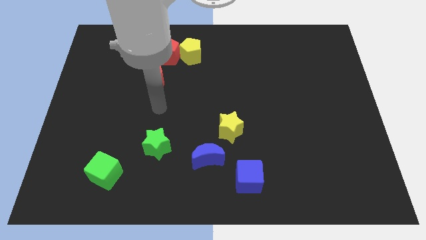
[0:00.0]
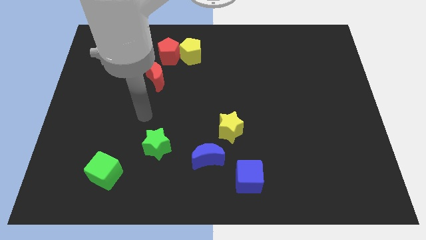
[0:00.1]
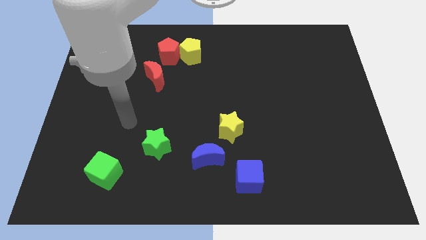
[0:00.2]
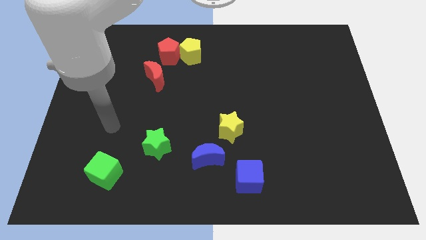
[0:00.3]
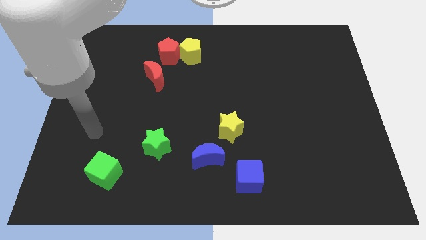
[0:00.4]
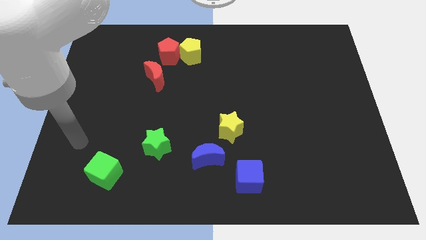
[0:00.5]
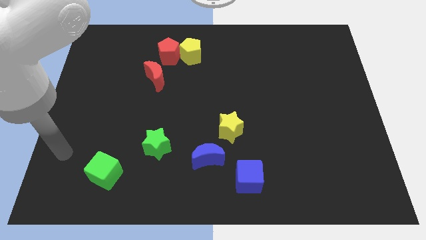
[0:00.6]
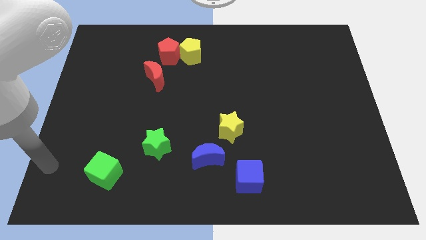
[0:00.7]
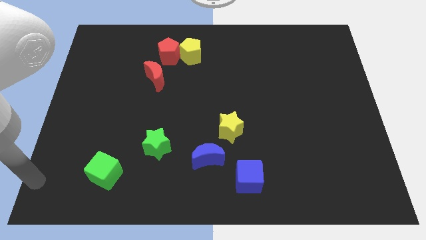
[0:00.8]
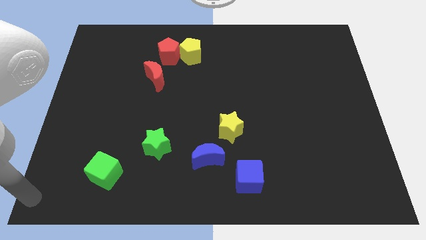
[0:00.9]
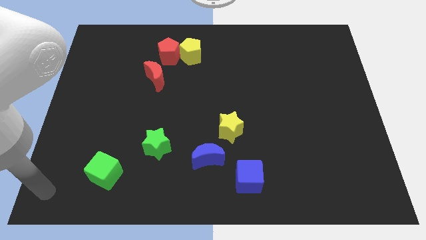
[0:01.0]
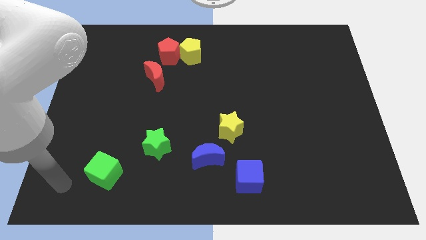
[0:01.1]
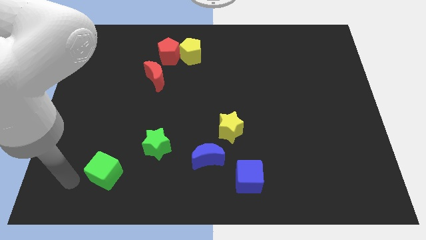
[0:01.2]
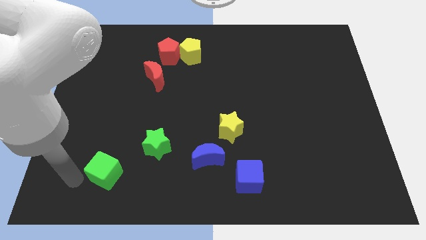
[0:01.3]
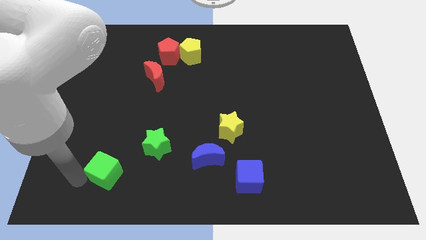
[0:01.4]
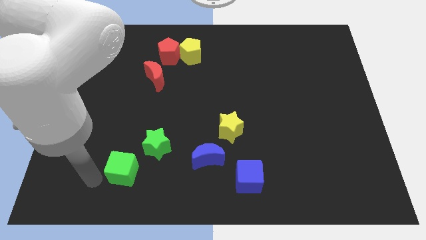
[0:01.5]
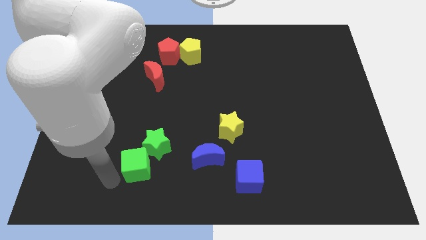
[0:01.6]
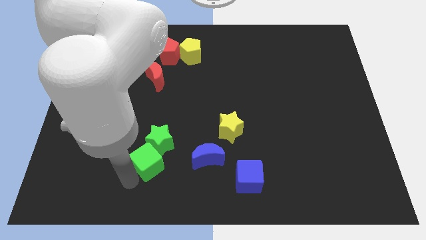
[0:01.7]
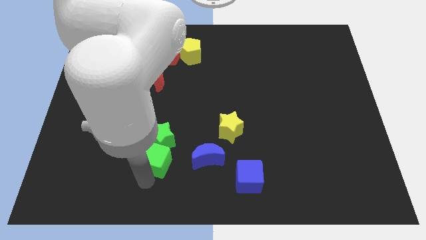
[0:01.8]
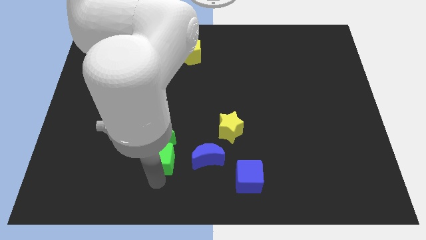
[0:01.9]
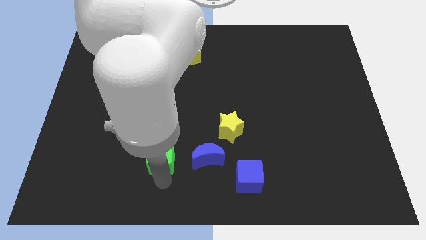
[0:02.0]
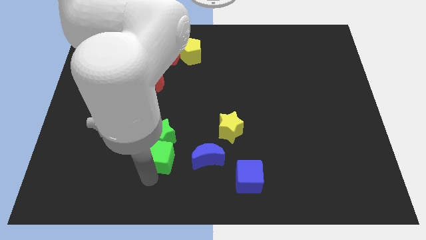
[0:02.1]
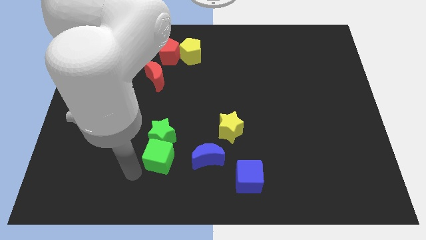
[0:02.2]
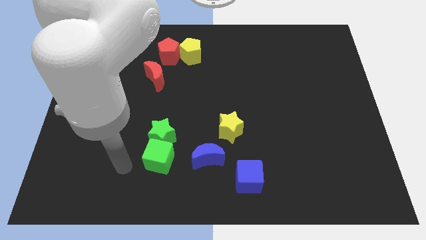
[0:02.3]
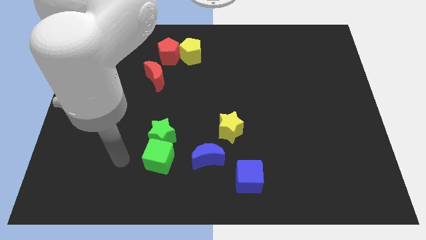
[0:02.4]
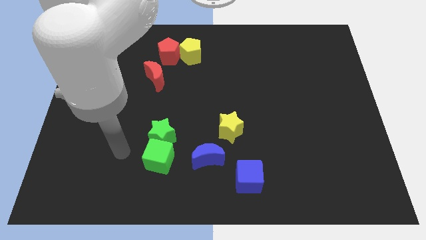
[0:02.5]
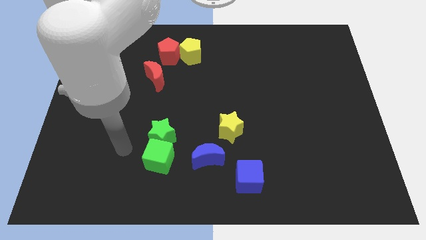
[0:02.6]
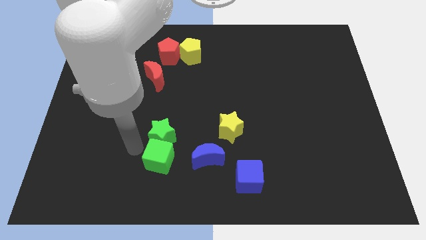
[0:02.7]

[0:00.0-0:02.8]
place the green cube at the bottom of the green star

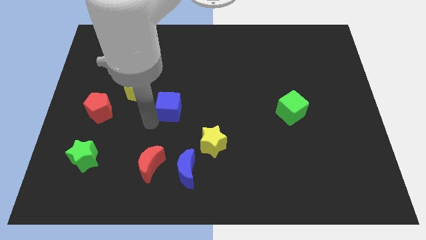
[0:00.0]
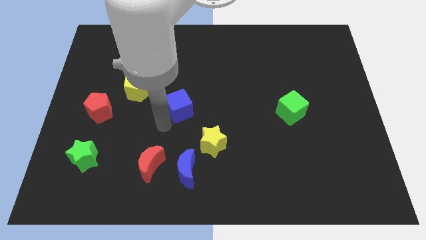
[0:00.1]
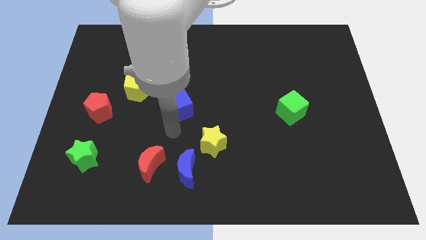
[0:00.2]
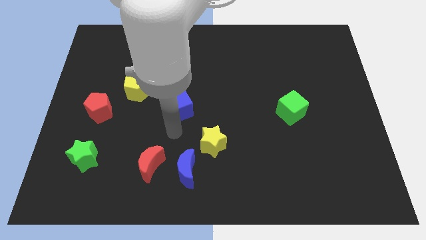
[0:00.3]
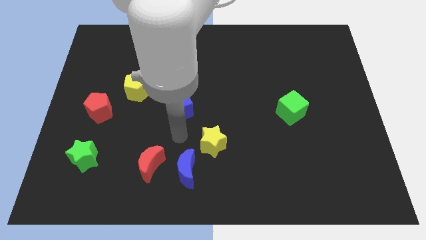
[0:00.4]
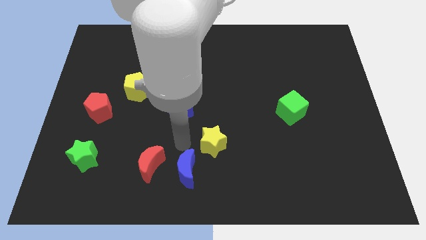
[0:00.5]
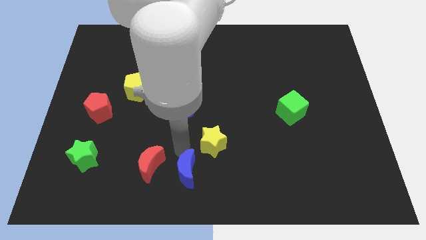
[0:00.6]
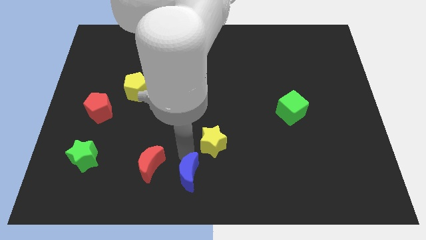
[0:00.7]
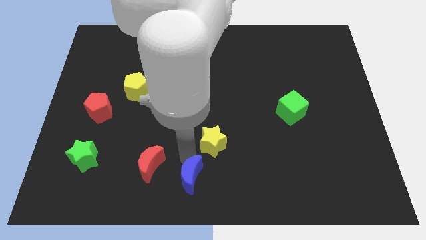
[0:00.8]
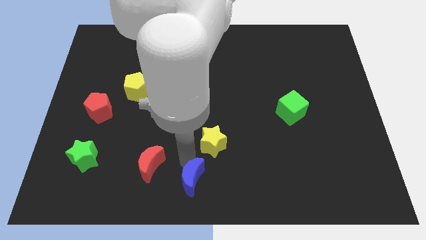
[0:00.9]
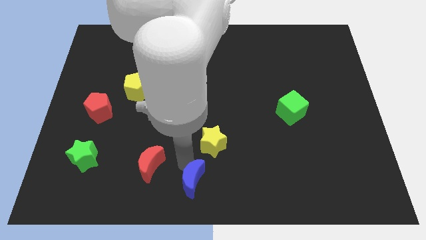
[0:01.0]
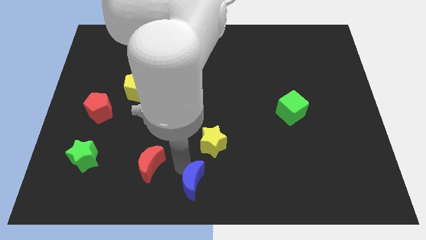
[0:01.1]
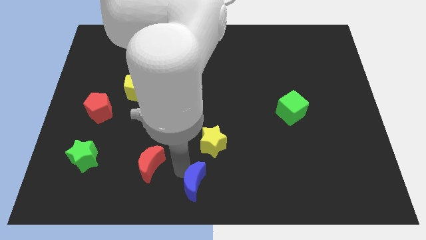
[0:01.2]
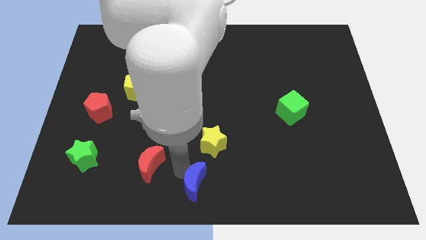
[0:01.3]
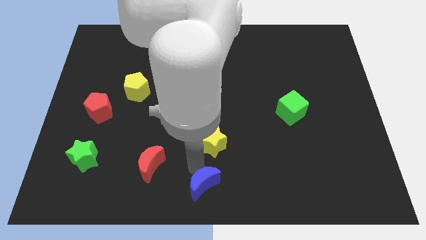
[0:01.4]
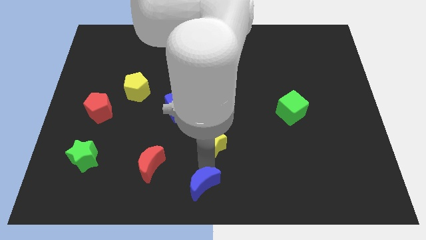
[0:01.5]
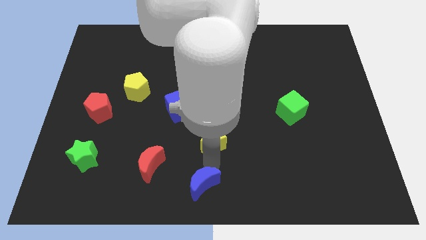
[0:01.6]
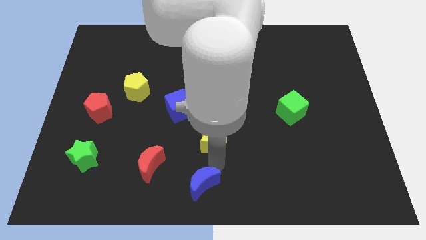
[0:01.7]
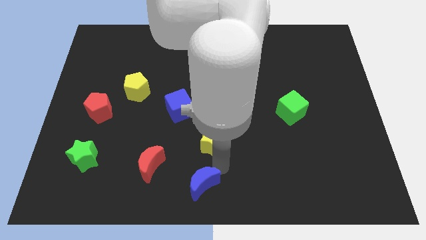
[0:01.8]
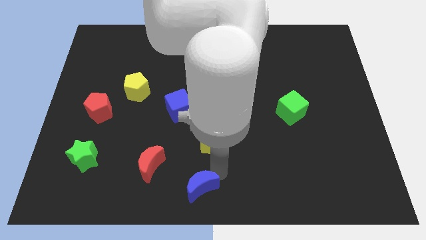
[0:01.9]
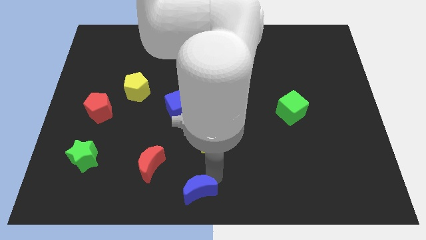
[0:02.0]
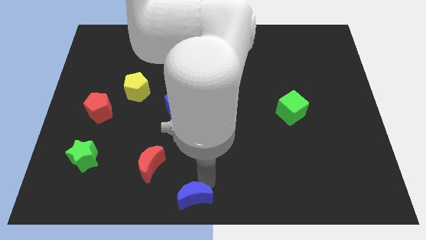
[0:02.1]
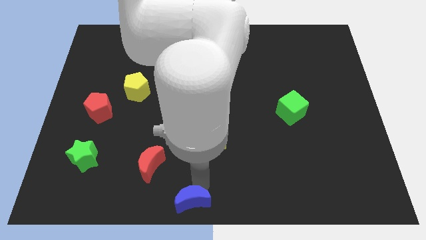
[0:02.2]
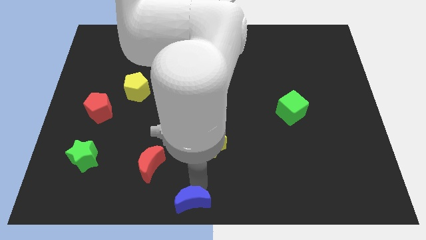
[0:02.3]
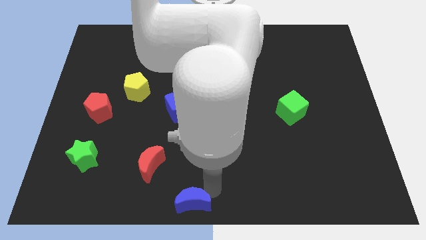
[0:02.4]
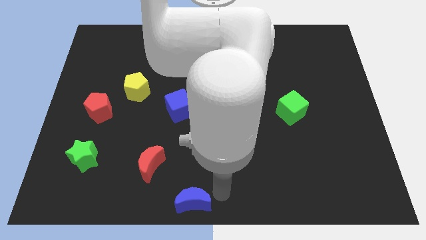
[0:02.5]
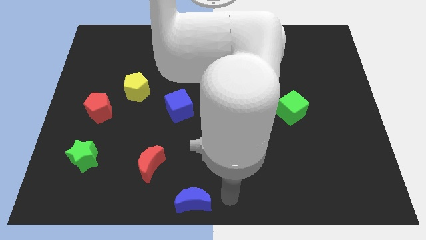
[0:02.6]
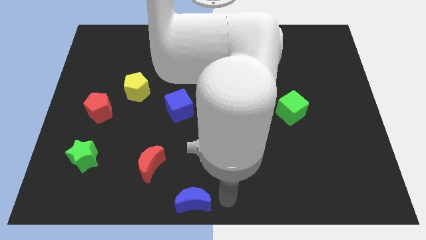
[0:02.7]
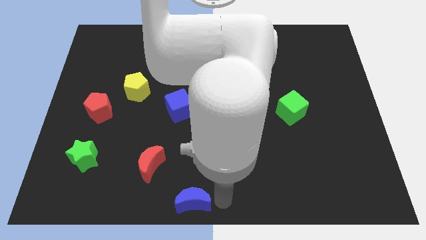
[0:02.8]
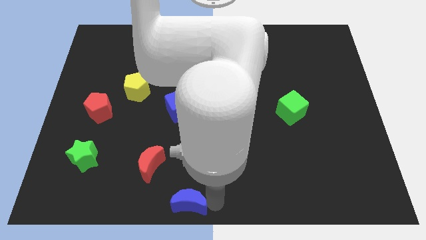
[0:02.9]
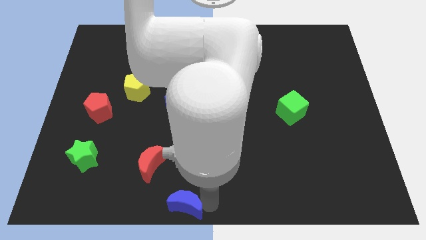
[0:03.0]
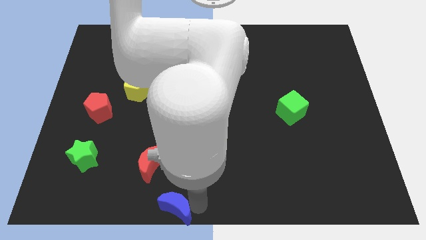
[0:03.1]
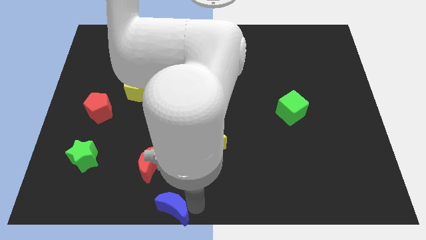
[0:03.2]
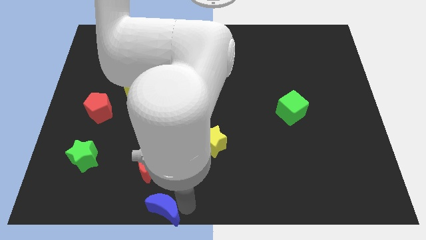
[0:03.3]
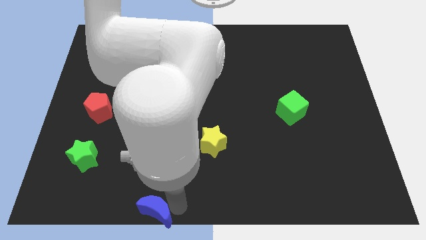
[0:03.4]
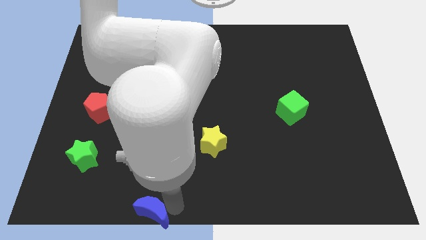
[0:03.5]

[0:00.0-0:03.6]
push the blue crescent below the red moon

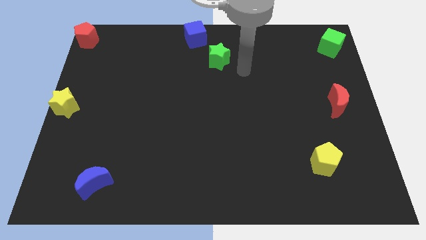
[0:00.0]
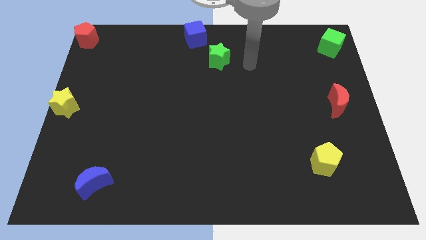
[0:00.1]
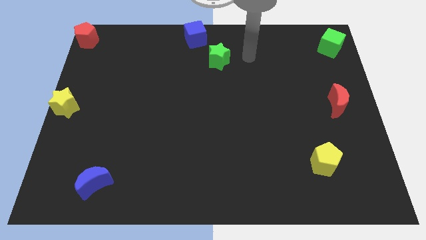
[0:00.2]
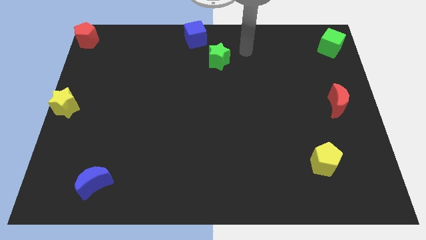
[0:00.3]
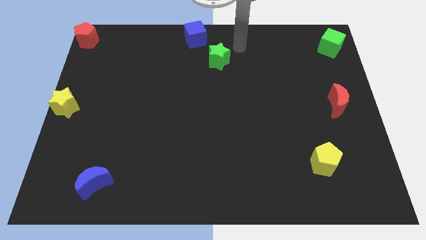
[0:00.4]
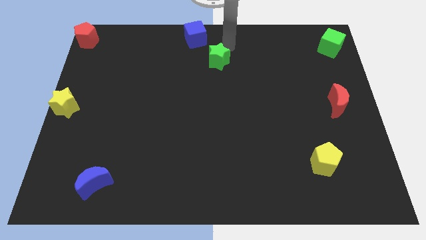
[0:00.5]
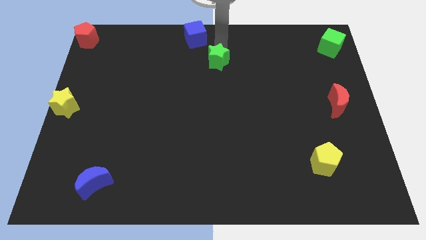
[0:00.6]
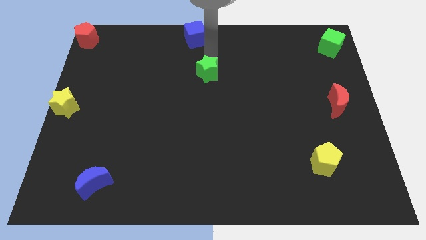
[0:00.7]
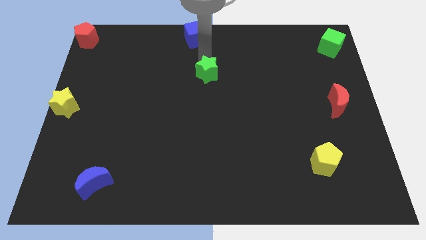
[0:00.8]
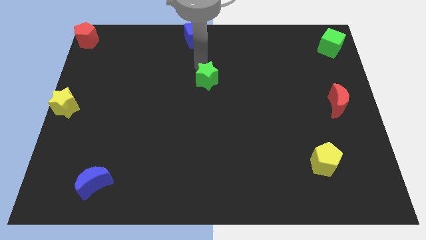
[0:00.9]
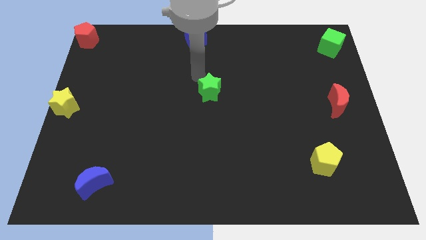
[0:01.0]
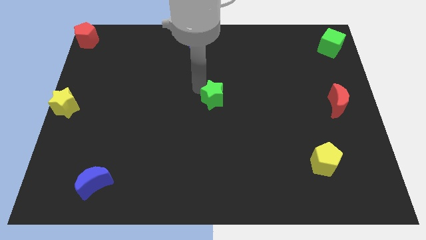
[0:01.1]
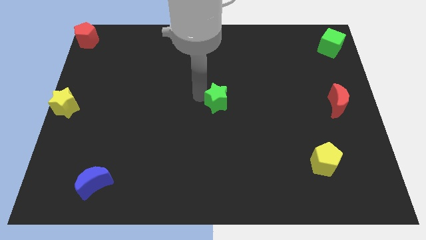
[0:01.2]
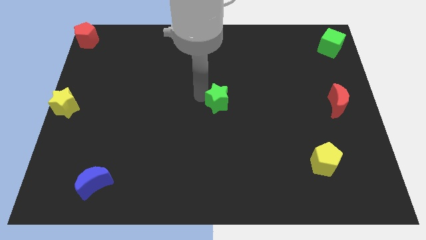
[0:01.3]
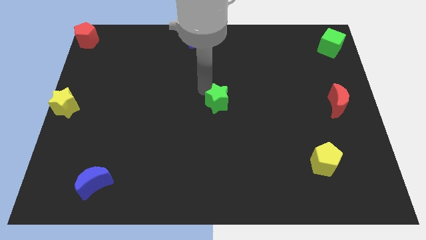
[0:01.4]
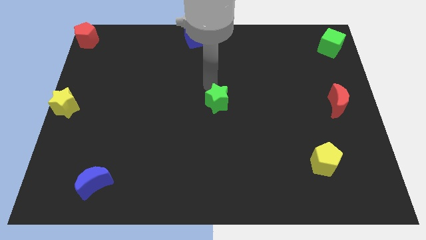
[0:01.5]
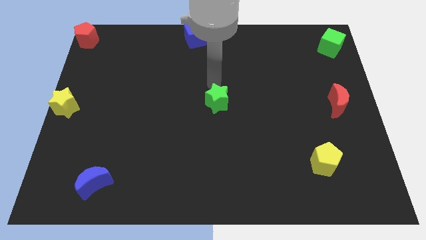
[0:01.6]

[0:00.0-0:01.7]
push the green star towards the center of the board

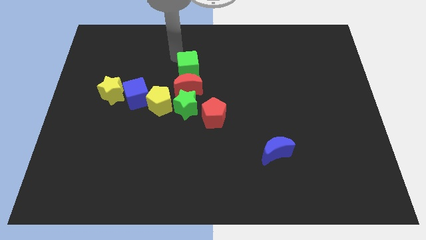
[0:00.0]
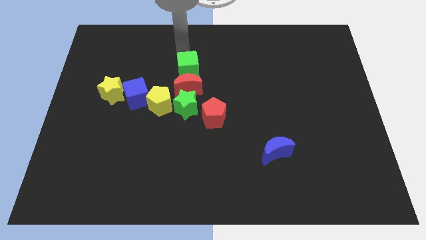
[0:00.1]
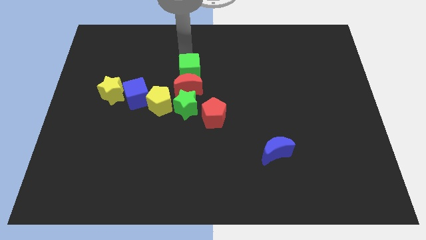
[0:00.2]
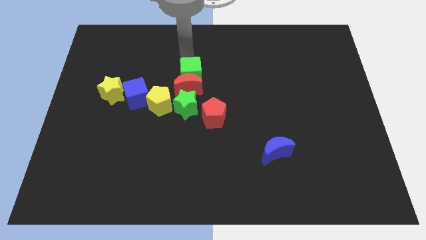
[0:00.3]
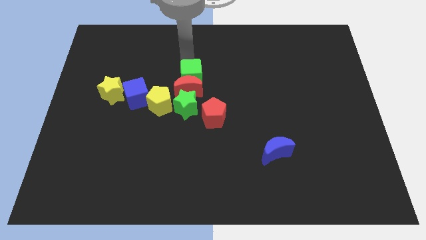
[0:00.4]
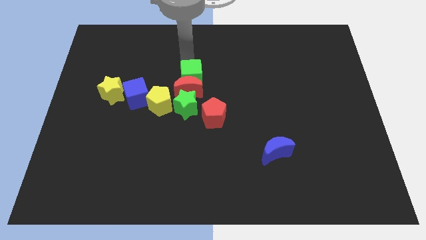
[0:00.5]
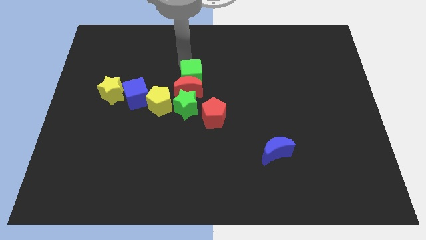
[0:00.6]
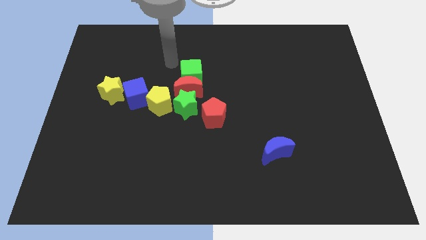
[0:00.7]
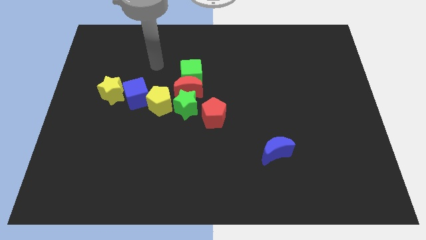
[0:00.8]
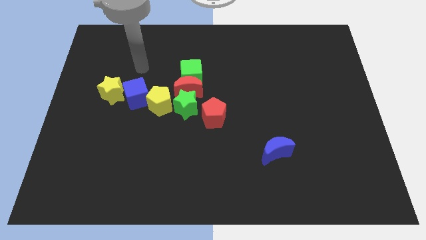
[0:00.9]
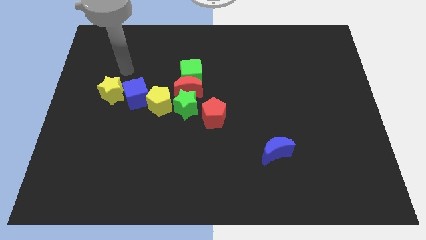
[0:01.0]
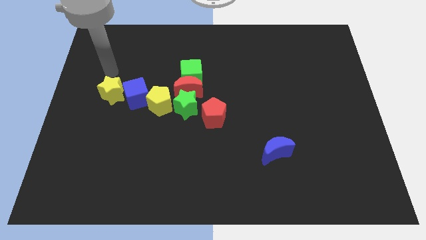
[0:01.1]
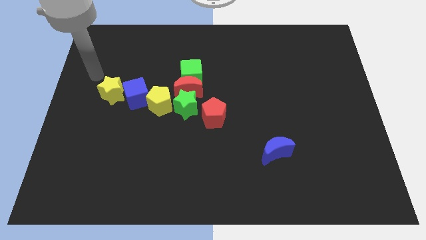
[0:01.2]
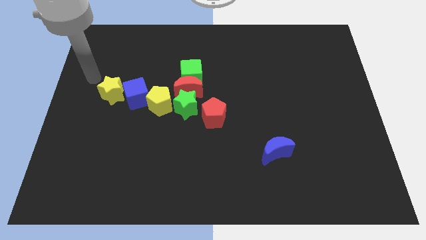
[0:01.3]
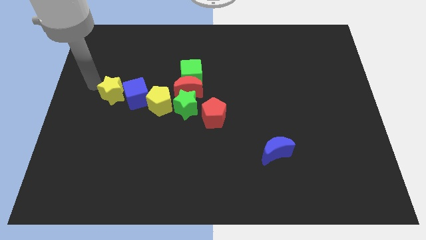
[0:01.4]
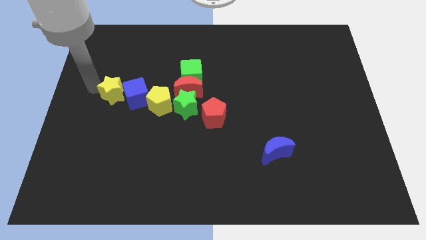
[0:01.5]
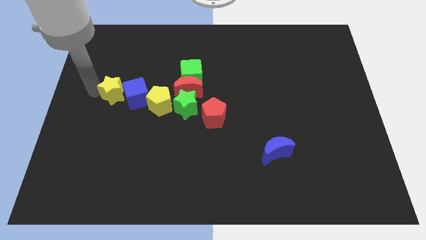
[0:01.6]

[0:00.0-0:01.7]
move the green cube slightly closer to red crescent
